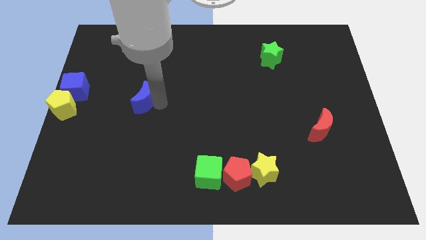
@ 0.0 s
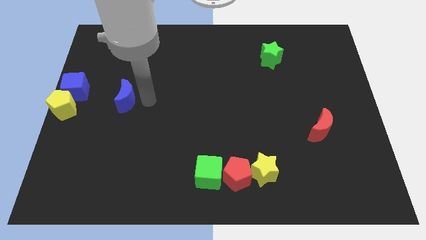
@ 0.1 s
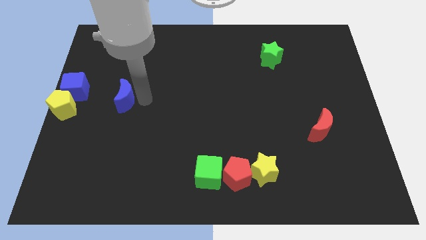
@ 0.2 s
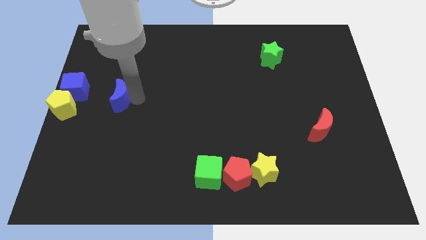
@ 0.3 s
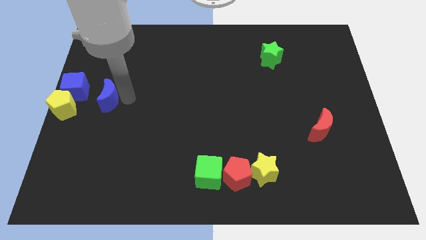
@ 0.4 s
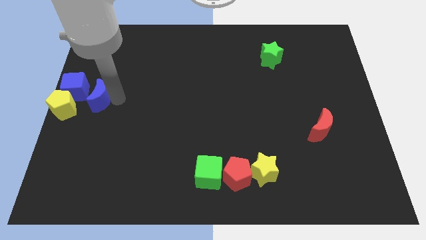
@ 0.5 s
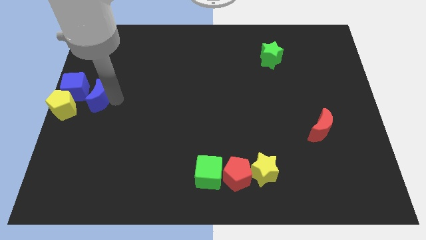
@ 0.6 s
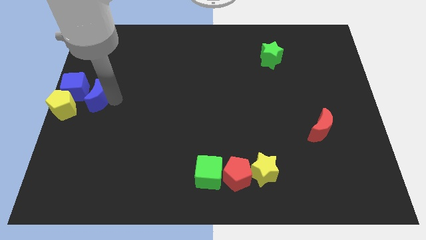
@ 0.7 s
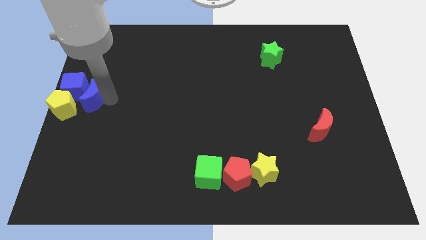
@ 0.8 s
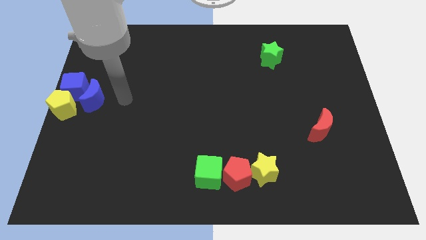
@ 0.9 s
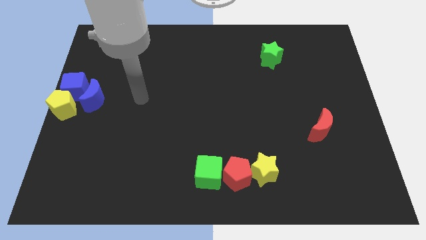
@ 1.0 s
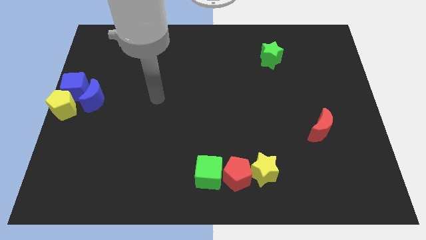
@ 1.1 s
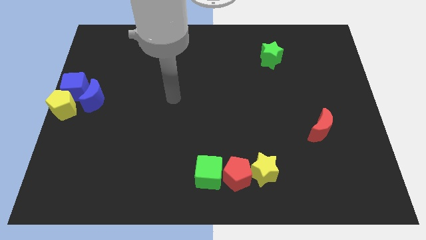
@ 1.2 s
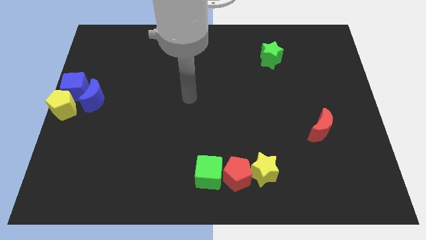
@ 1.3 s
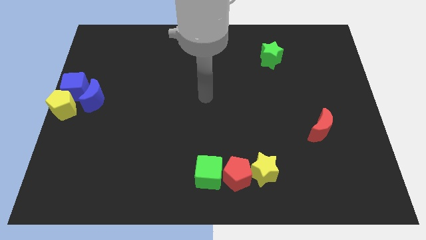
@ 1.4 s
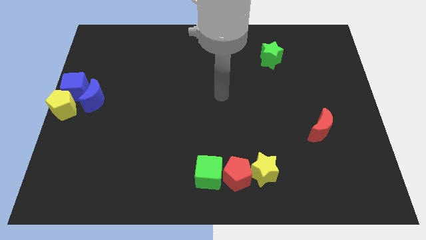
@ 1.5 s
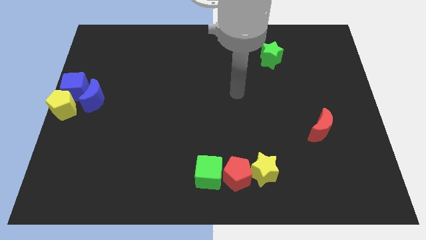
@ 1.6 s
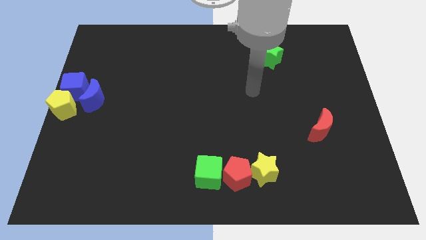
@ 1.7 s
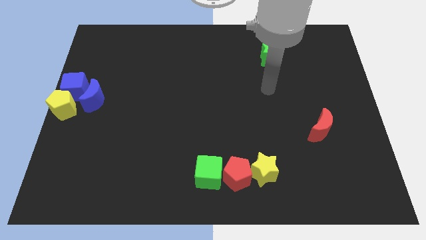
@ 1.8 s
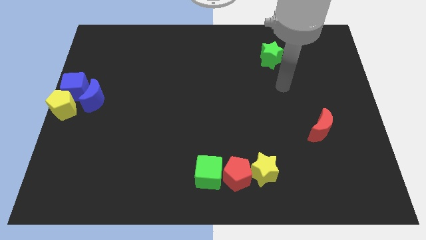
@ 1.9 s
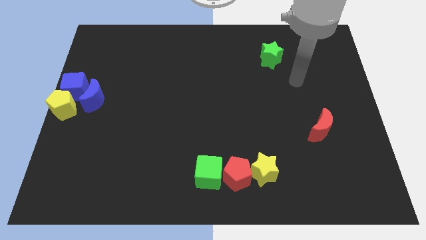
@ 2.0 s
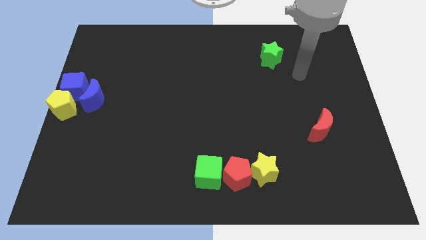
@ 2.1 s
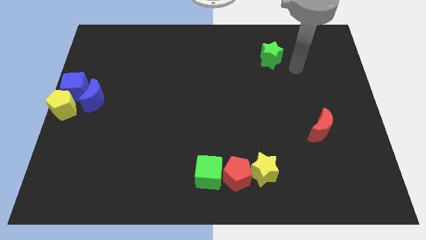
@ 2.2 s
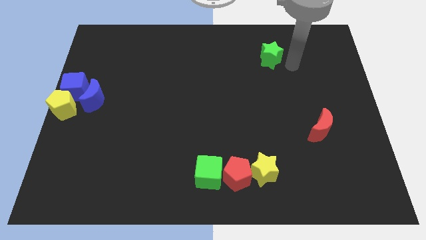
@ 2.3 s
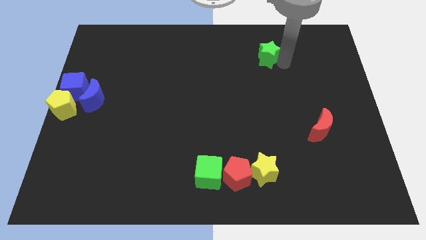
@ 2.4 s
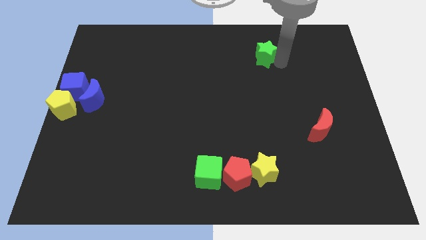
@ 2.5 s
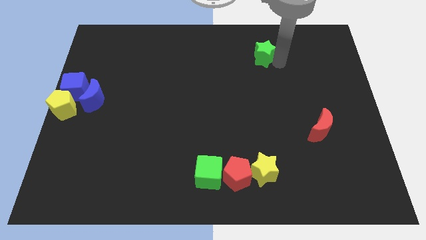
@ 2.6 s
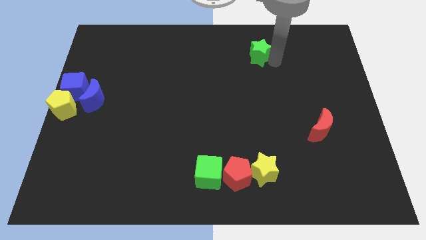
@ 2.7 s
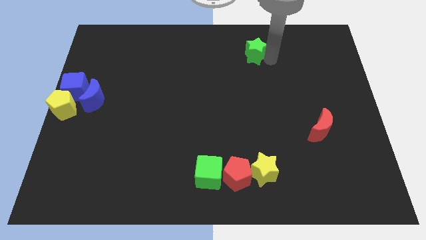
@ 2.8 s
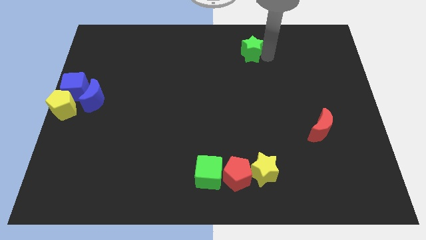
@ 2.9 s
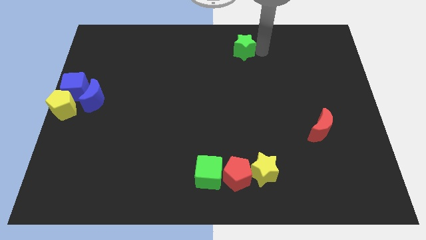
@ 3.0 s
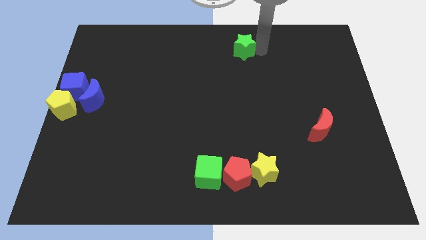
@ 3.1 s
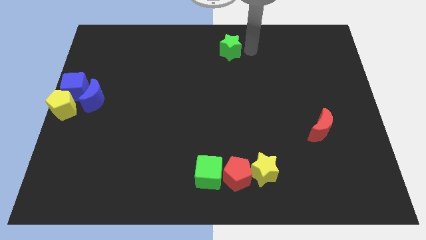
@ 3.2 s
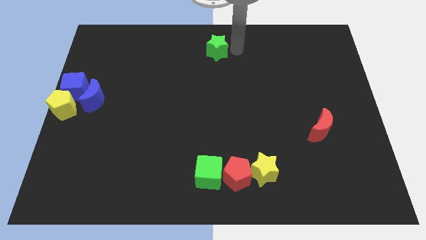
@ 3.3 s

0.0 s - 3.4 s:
move green star to the center

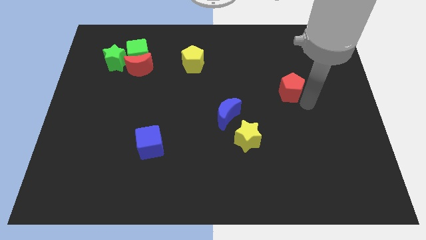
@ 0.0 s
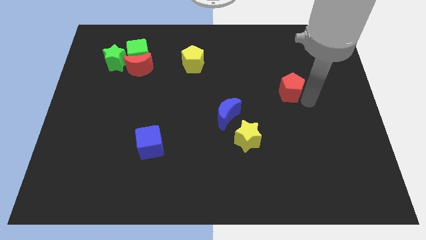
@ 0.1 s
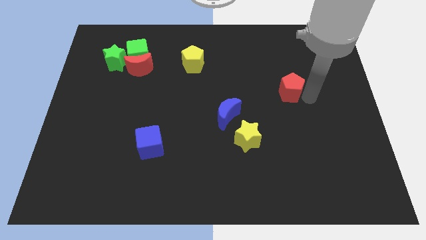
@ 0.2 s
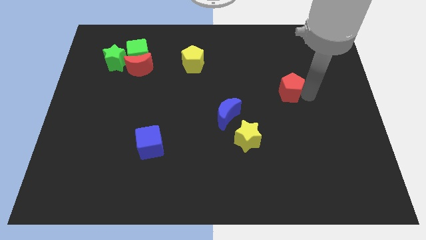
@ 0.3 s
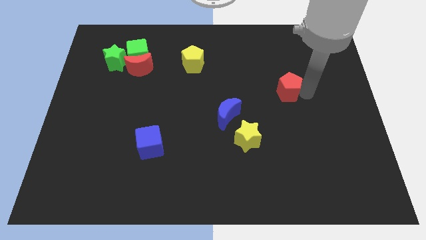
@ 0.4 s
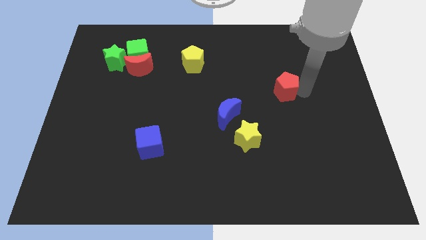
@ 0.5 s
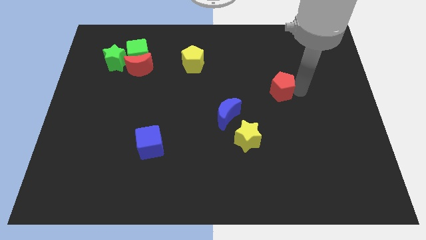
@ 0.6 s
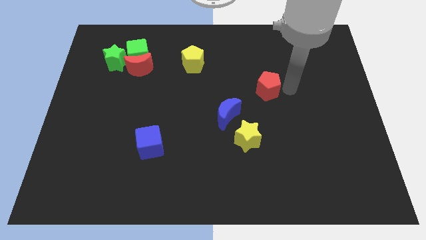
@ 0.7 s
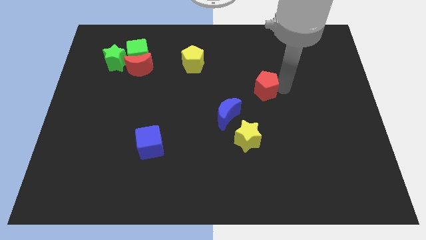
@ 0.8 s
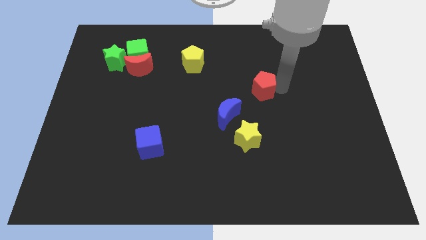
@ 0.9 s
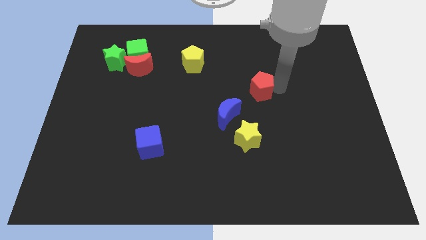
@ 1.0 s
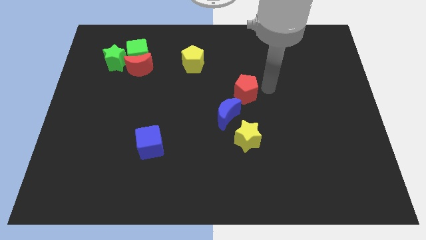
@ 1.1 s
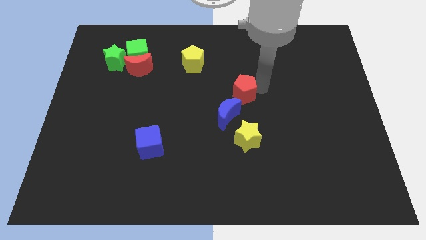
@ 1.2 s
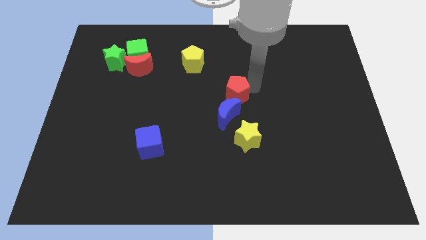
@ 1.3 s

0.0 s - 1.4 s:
move red pentagon close to the blue moon

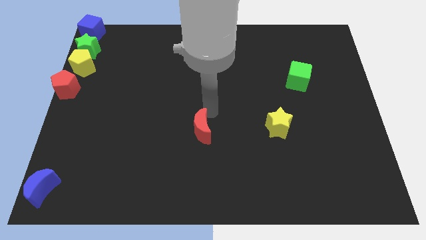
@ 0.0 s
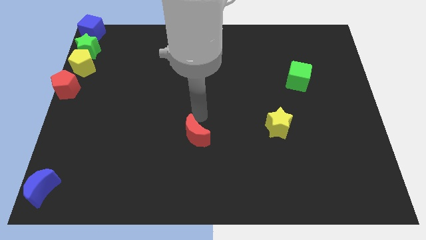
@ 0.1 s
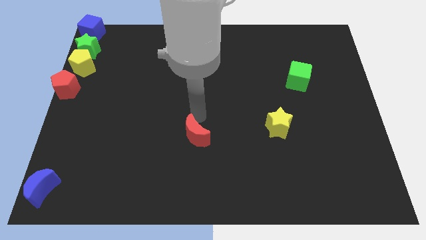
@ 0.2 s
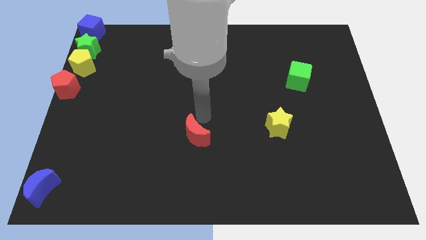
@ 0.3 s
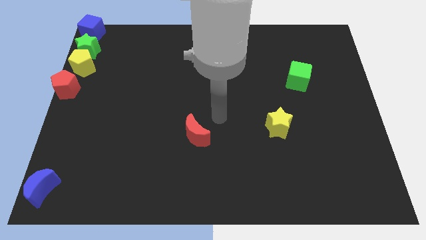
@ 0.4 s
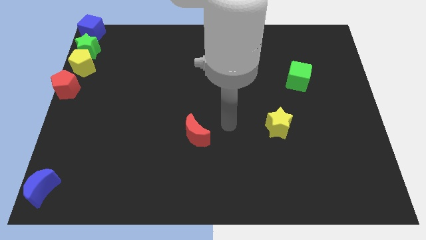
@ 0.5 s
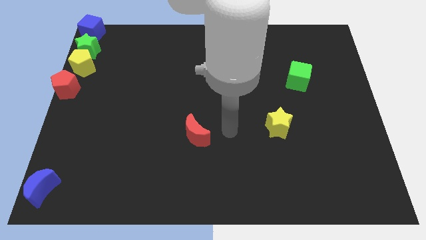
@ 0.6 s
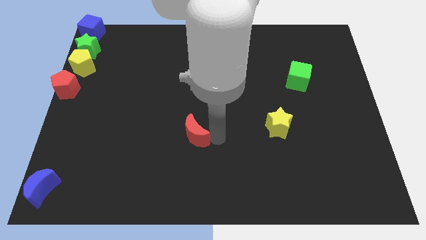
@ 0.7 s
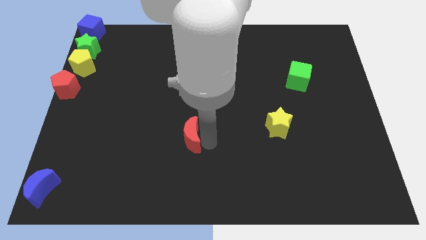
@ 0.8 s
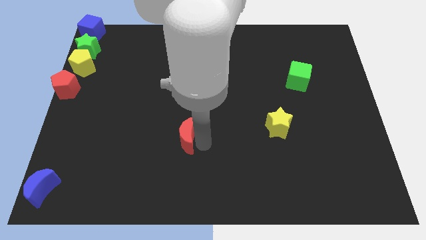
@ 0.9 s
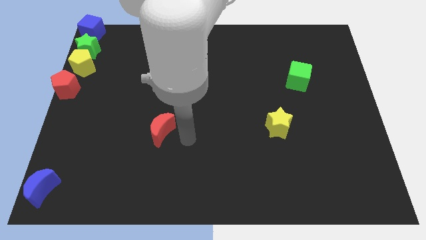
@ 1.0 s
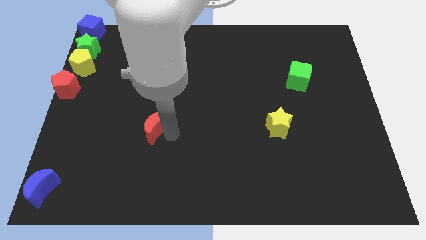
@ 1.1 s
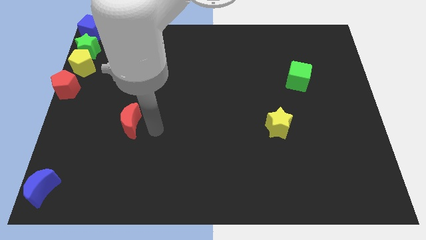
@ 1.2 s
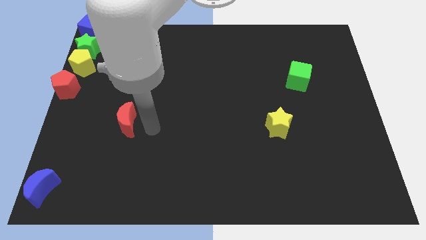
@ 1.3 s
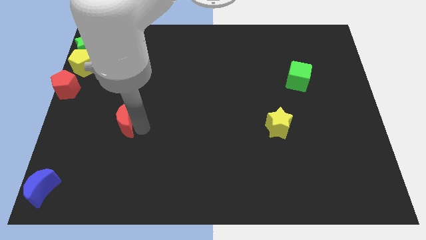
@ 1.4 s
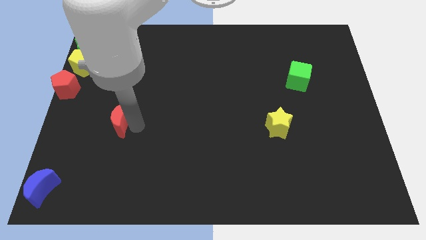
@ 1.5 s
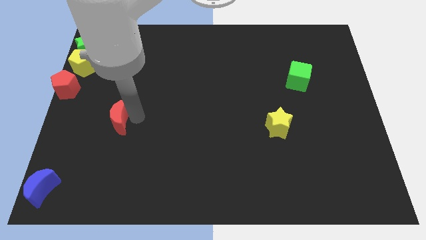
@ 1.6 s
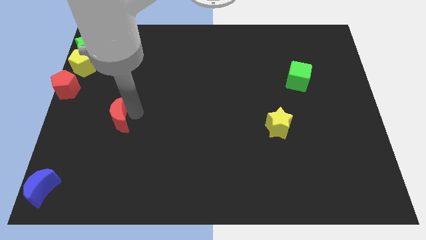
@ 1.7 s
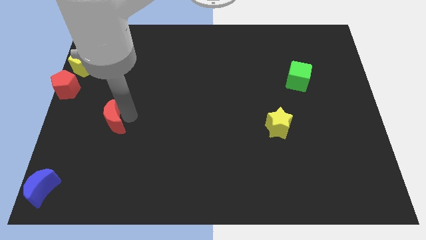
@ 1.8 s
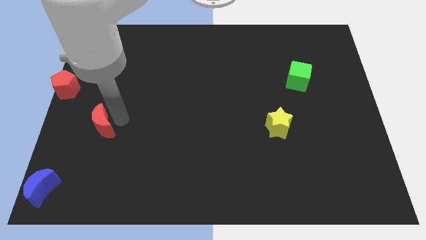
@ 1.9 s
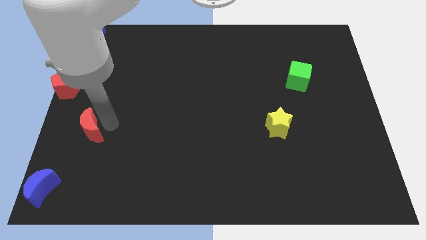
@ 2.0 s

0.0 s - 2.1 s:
move the red crescent towards the centre left

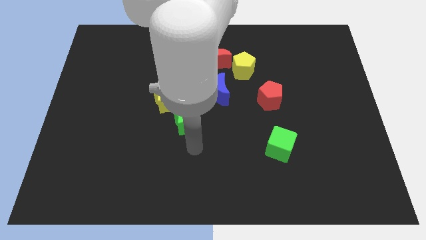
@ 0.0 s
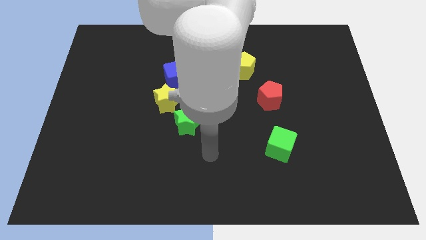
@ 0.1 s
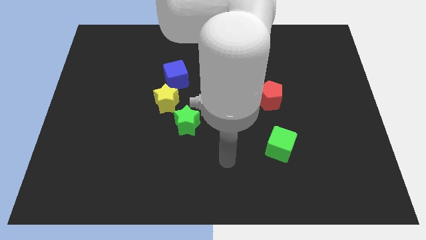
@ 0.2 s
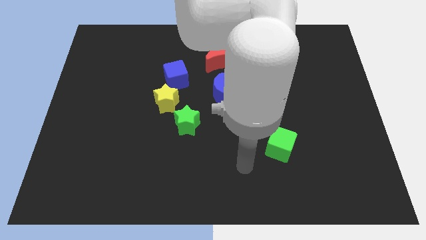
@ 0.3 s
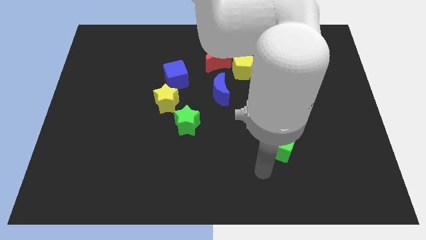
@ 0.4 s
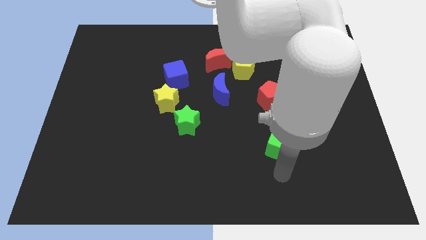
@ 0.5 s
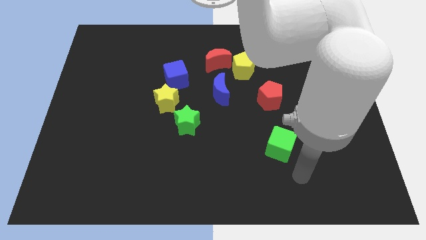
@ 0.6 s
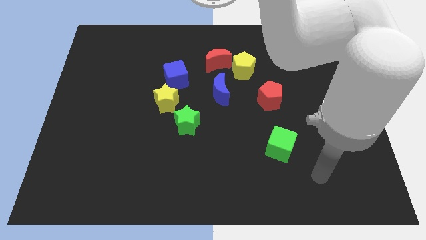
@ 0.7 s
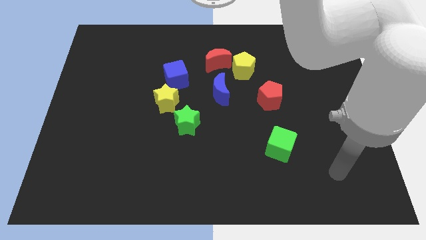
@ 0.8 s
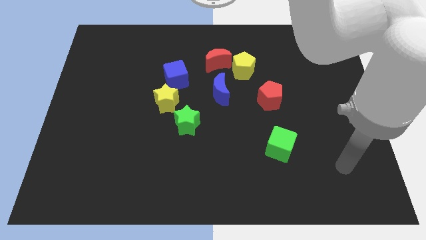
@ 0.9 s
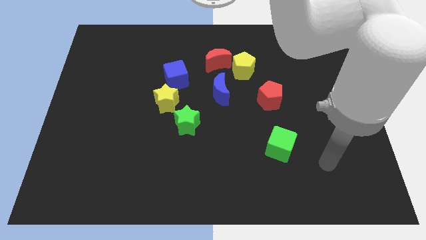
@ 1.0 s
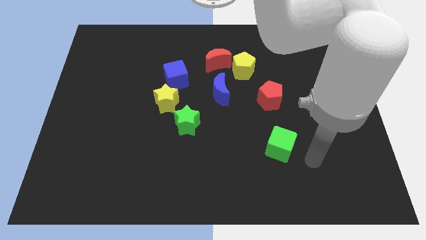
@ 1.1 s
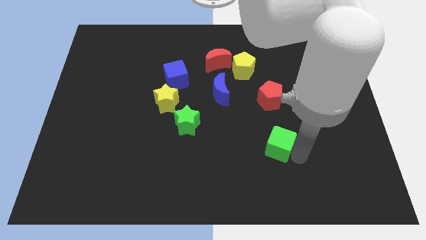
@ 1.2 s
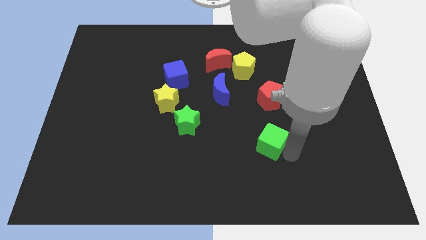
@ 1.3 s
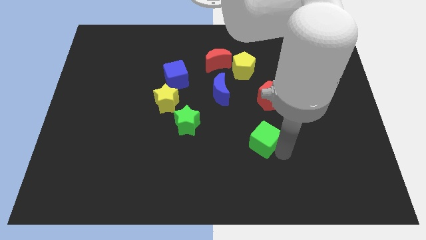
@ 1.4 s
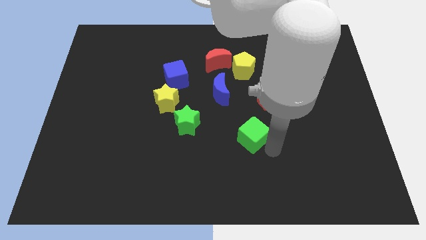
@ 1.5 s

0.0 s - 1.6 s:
push the green cube towards the blue crescent

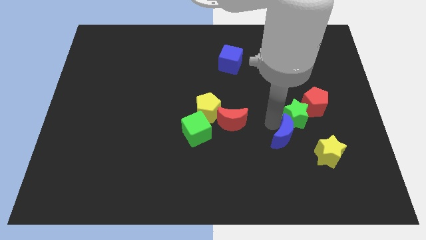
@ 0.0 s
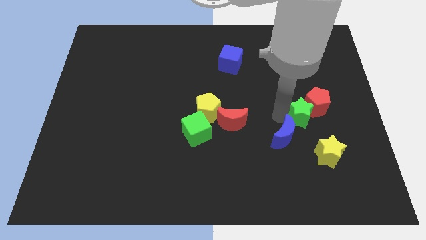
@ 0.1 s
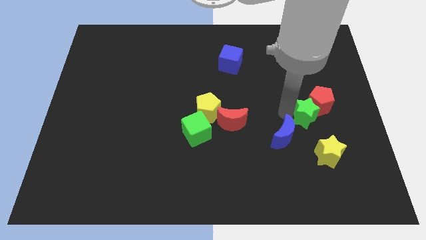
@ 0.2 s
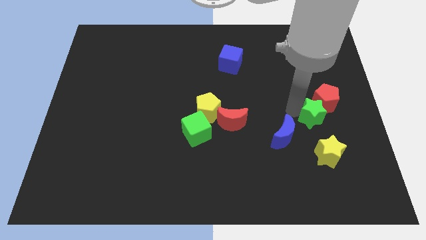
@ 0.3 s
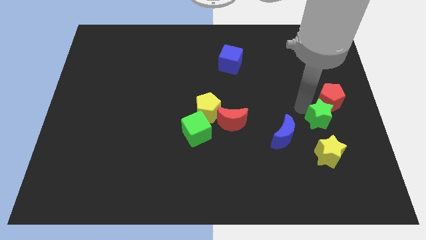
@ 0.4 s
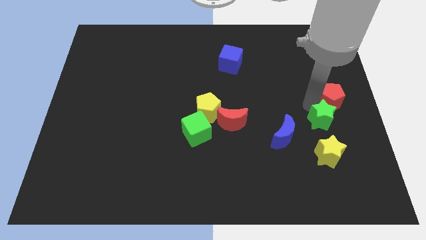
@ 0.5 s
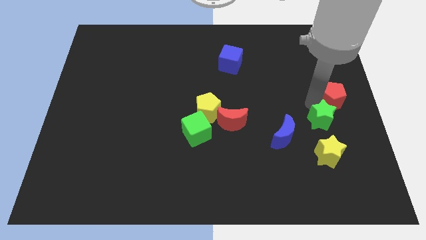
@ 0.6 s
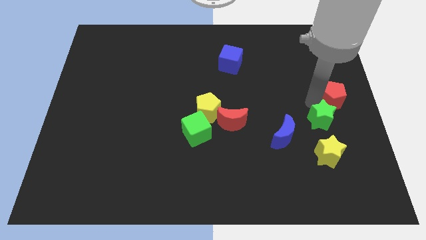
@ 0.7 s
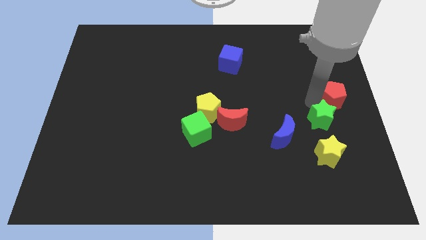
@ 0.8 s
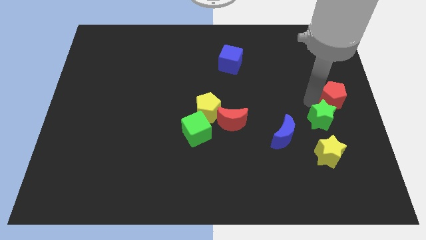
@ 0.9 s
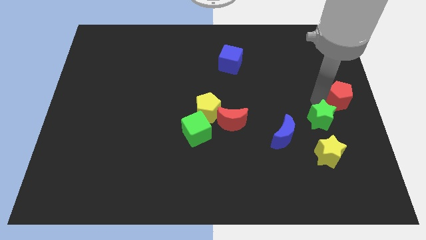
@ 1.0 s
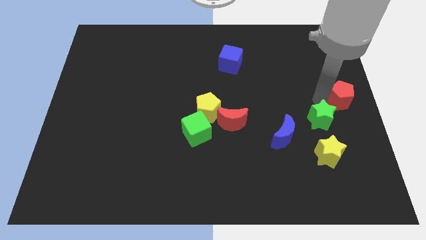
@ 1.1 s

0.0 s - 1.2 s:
slide the green star slightly to the right
